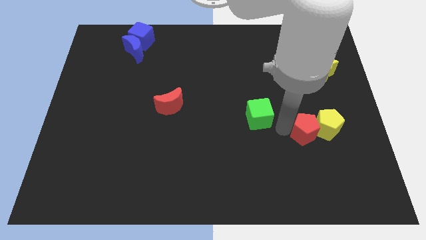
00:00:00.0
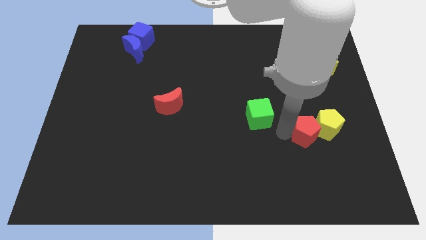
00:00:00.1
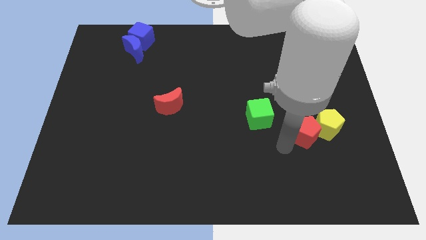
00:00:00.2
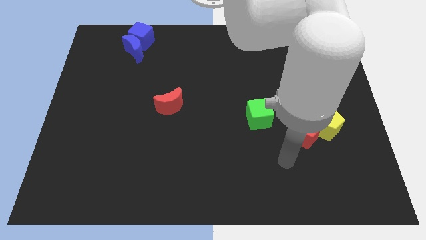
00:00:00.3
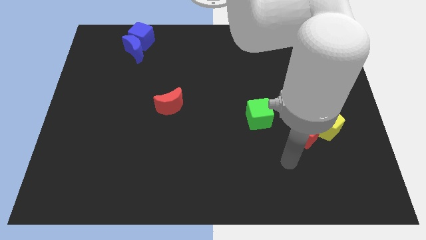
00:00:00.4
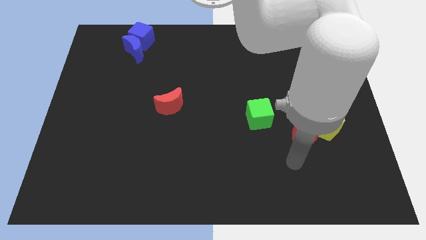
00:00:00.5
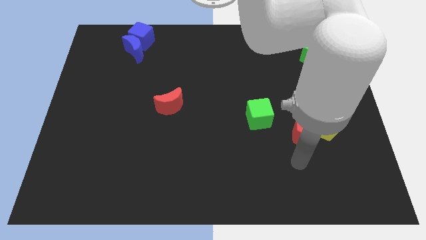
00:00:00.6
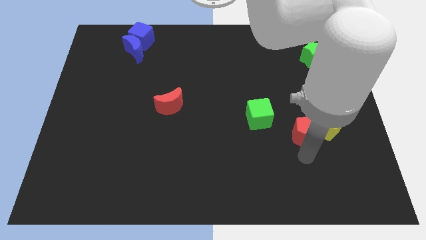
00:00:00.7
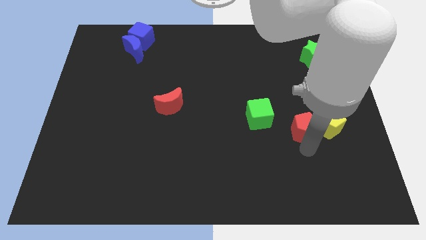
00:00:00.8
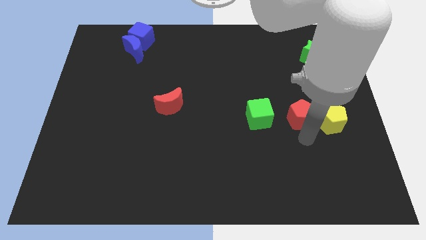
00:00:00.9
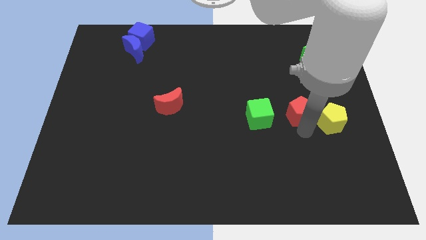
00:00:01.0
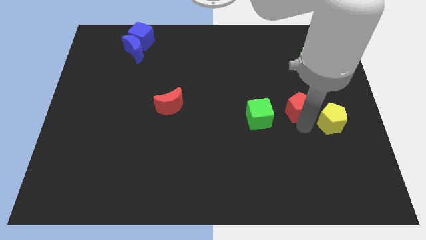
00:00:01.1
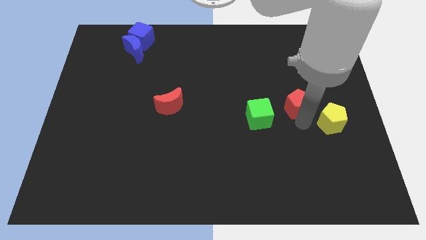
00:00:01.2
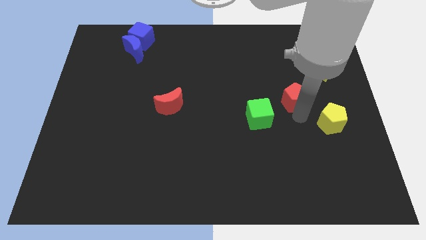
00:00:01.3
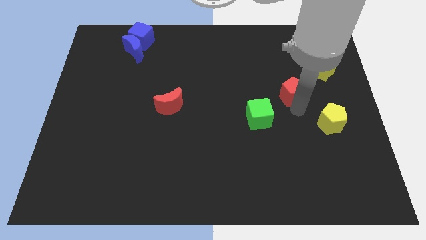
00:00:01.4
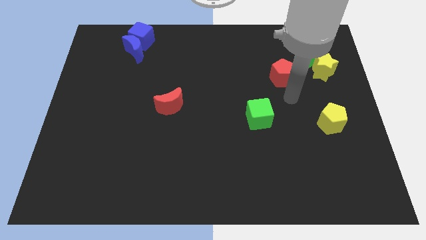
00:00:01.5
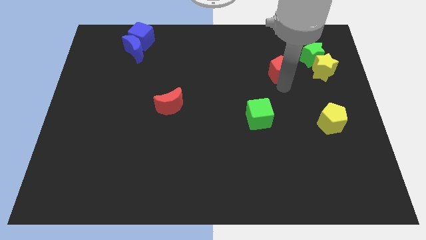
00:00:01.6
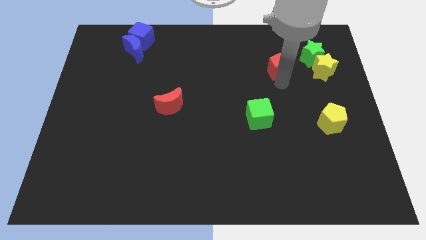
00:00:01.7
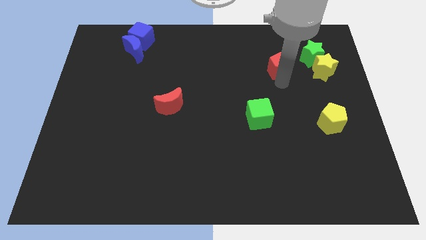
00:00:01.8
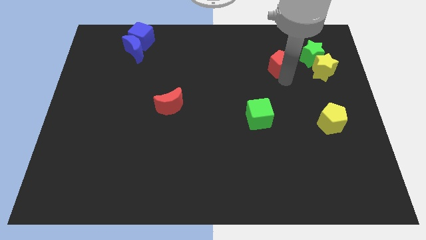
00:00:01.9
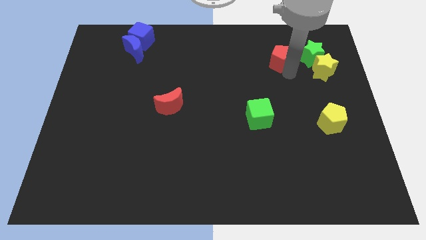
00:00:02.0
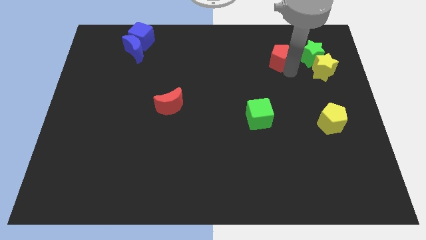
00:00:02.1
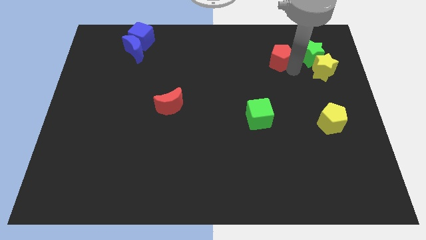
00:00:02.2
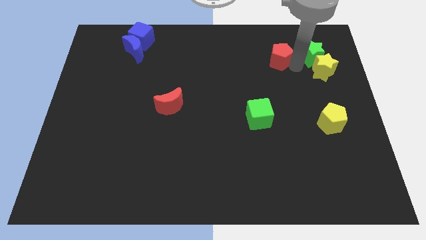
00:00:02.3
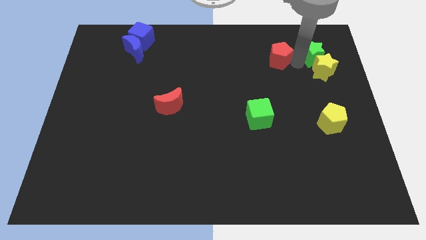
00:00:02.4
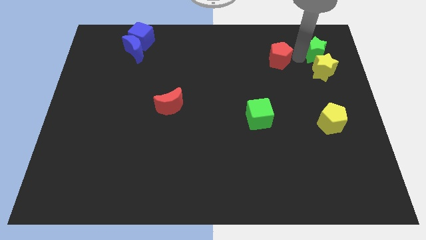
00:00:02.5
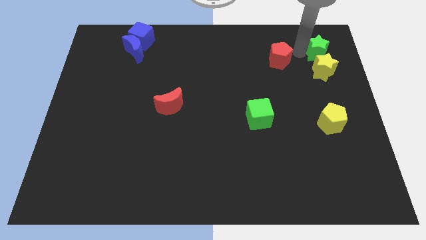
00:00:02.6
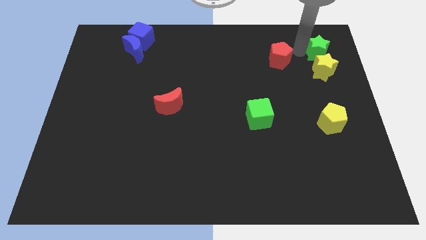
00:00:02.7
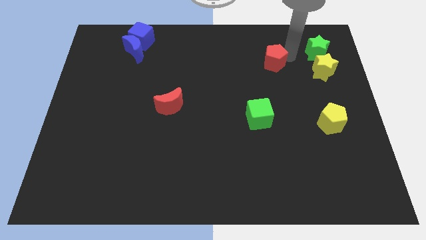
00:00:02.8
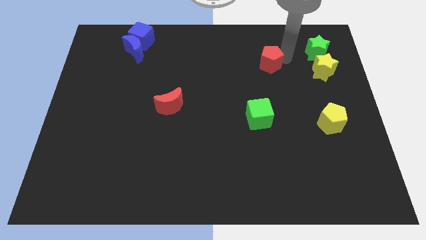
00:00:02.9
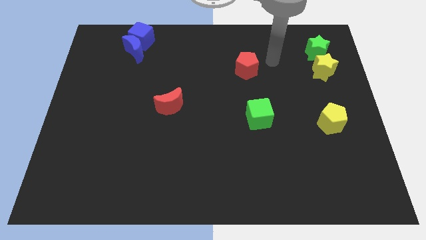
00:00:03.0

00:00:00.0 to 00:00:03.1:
place the red pentagon above the green cube

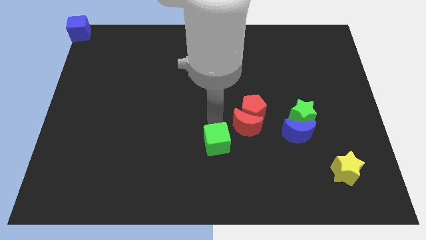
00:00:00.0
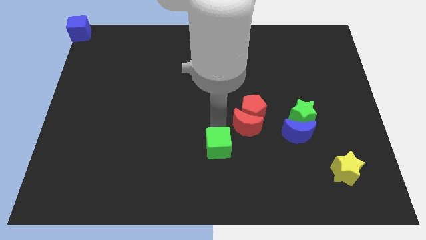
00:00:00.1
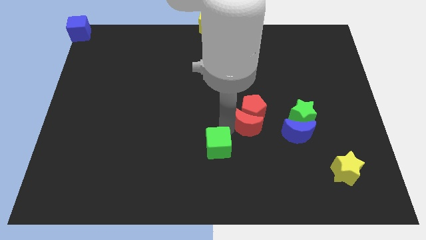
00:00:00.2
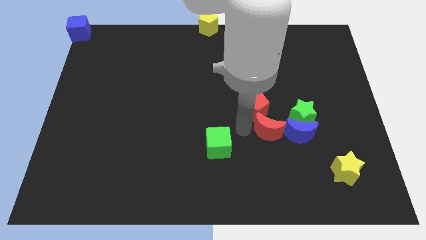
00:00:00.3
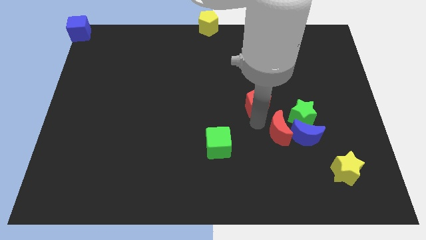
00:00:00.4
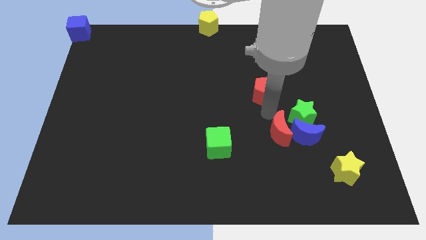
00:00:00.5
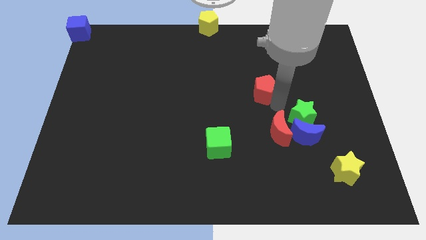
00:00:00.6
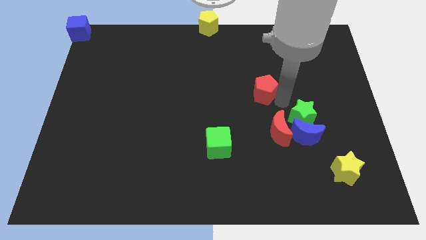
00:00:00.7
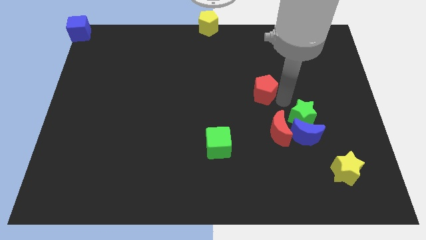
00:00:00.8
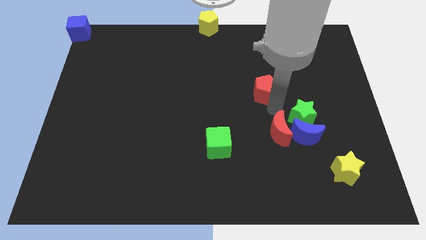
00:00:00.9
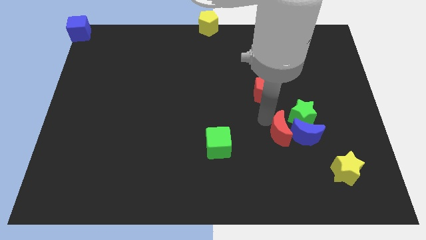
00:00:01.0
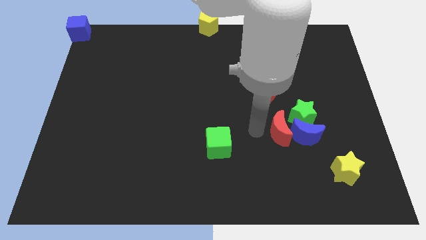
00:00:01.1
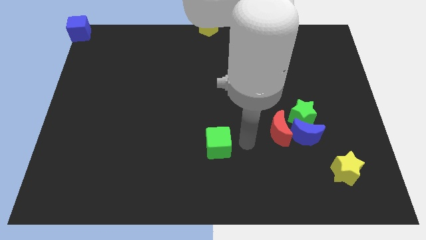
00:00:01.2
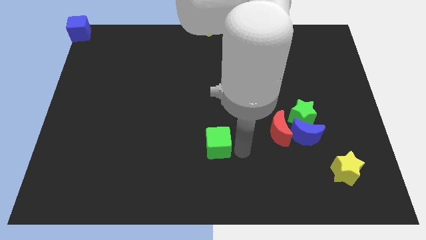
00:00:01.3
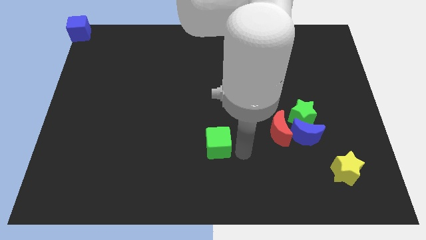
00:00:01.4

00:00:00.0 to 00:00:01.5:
separate the red blocks

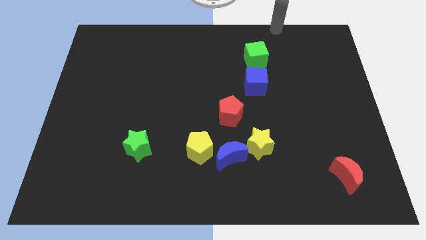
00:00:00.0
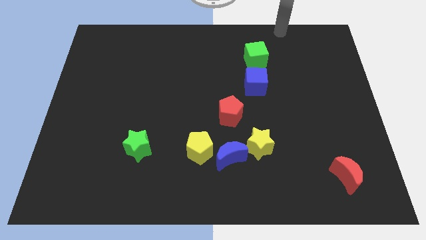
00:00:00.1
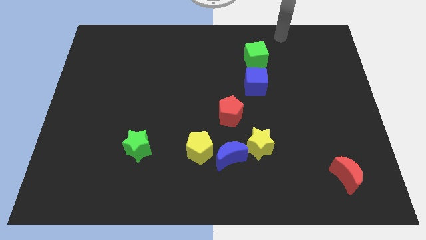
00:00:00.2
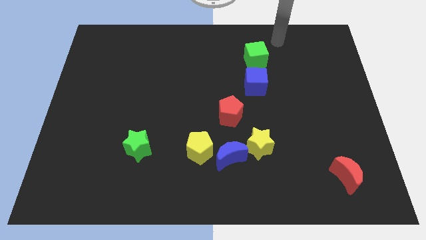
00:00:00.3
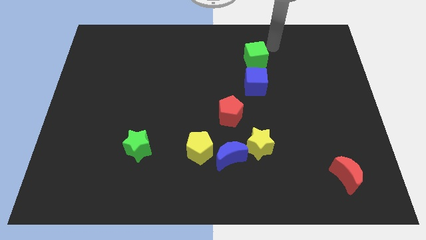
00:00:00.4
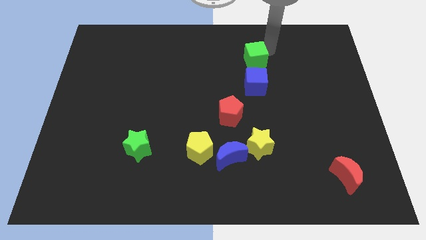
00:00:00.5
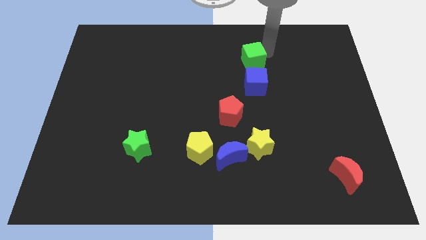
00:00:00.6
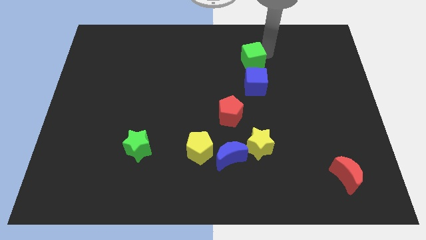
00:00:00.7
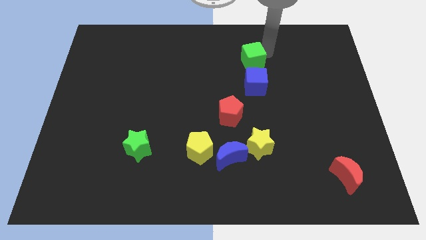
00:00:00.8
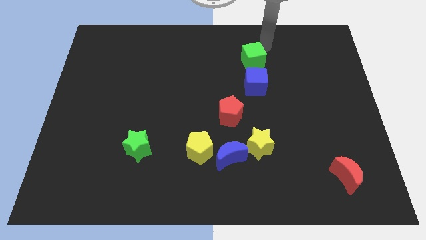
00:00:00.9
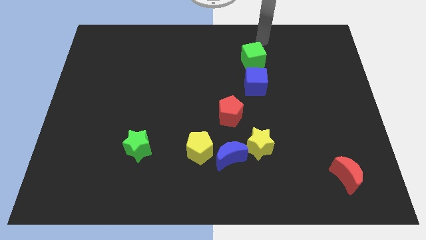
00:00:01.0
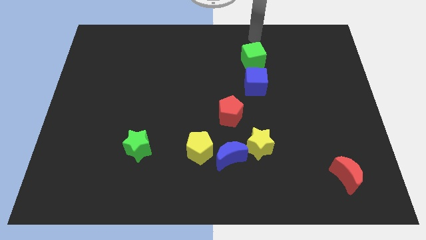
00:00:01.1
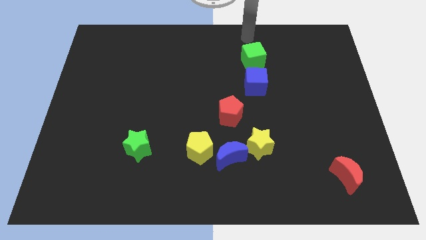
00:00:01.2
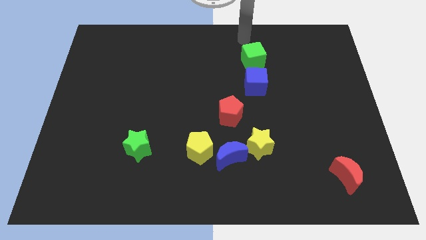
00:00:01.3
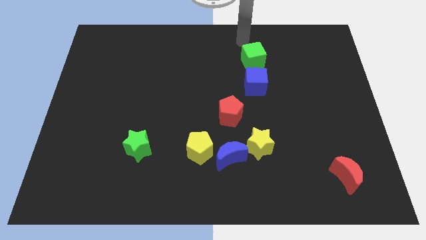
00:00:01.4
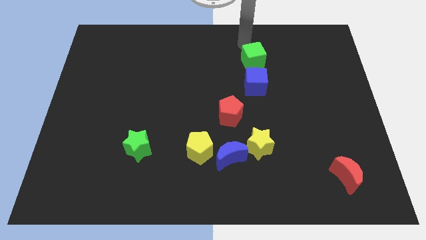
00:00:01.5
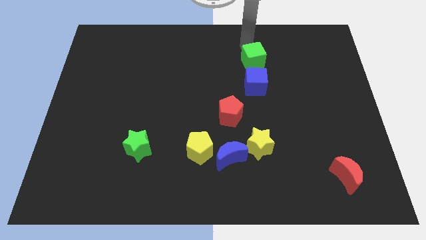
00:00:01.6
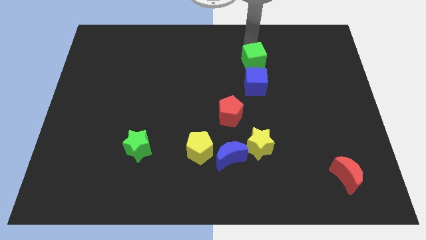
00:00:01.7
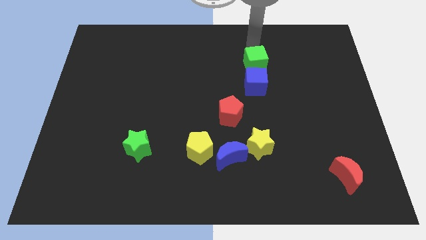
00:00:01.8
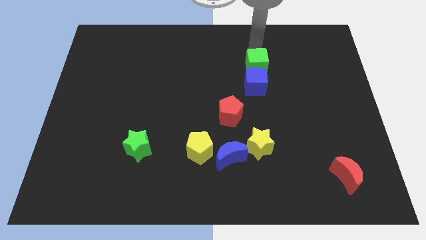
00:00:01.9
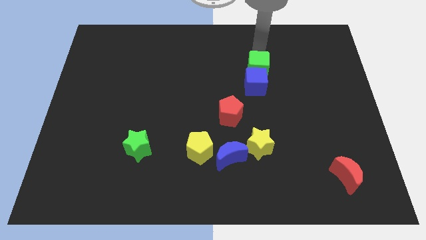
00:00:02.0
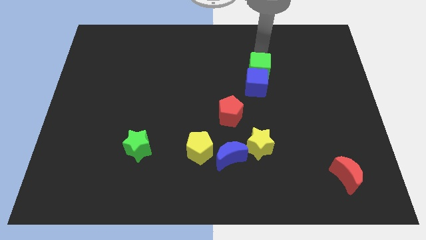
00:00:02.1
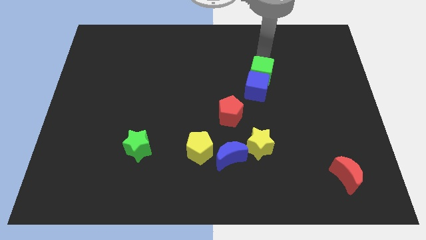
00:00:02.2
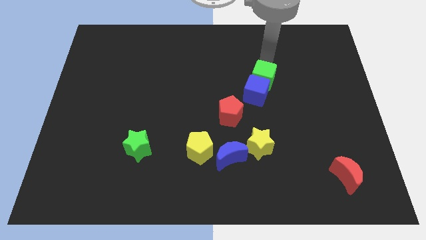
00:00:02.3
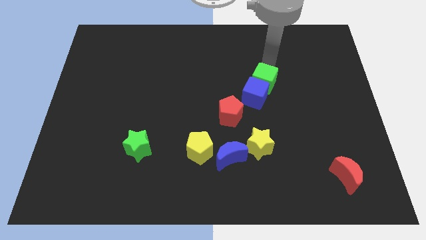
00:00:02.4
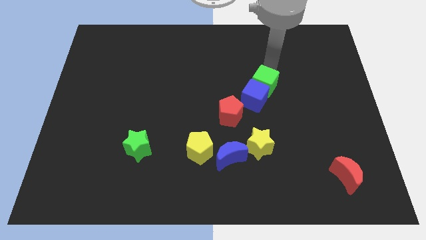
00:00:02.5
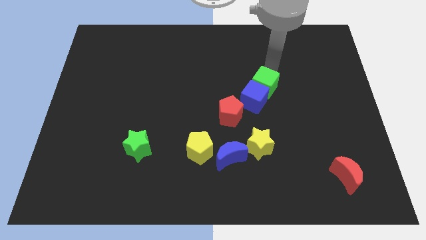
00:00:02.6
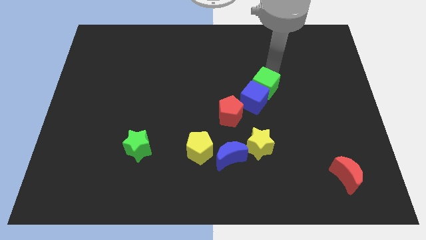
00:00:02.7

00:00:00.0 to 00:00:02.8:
push the green cube into the blue cube

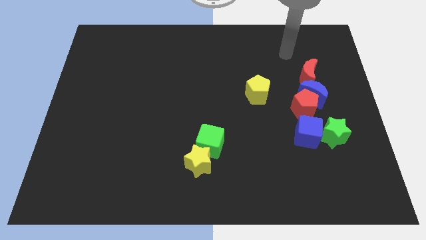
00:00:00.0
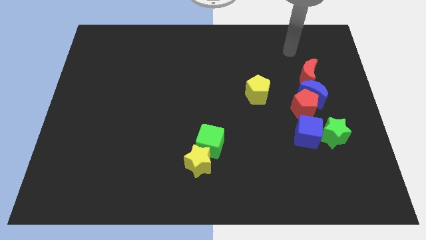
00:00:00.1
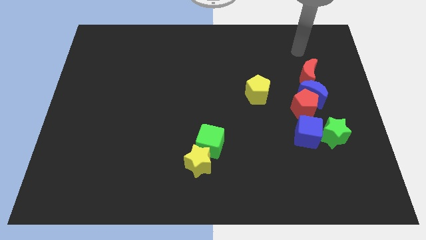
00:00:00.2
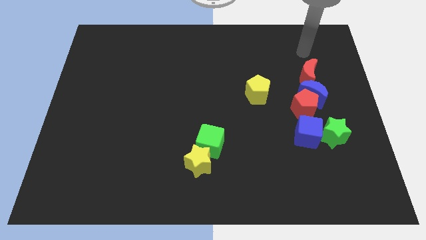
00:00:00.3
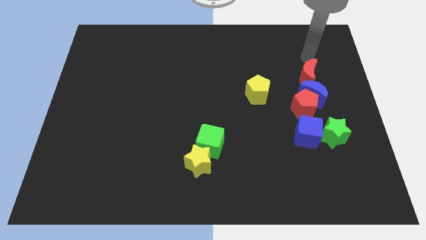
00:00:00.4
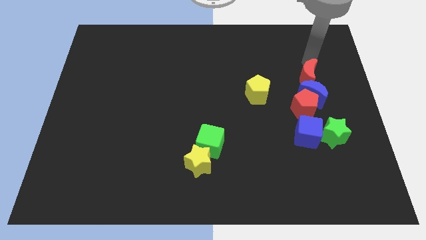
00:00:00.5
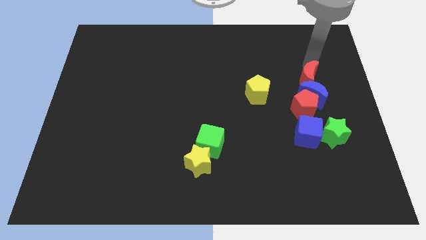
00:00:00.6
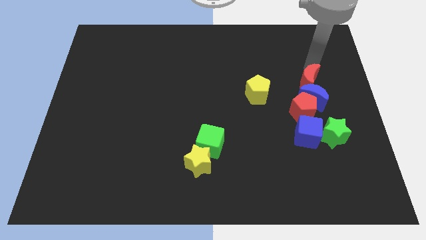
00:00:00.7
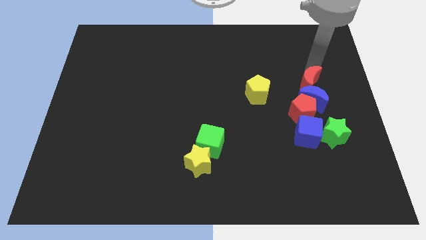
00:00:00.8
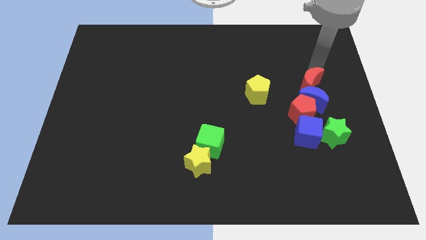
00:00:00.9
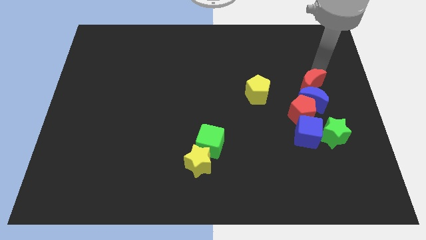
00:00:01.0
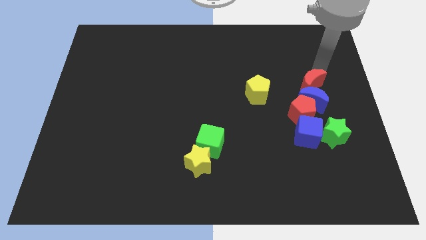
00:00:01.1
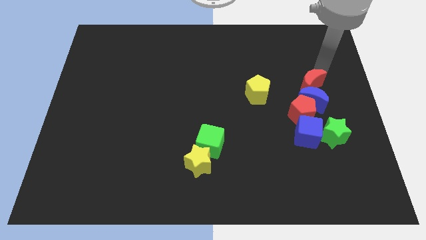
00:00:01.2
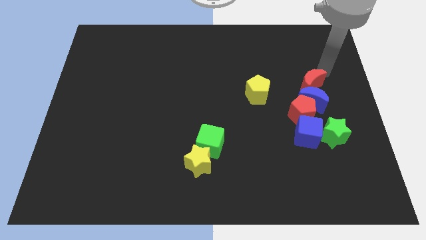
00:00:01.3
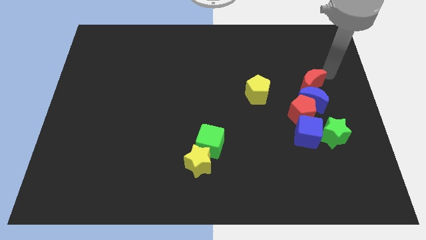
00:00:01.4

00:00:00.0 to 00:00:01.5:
push the red moon slightly to the down

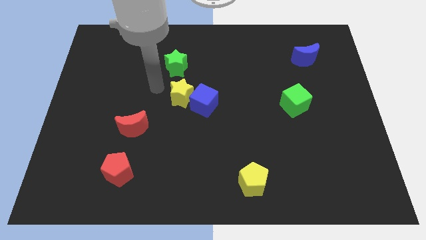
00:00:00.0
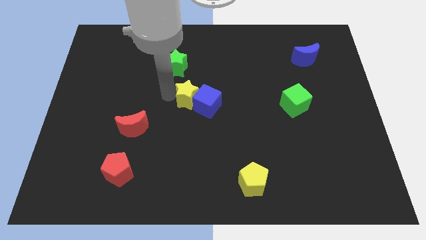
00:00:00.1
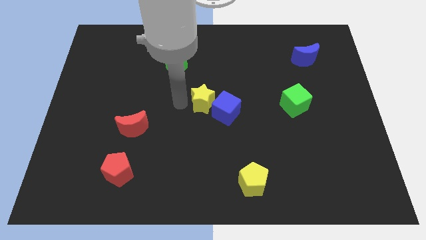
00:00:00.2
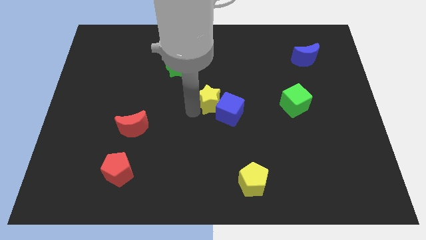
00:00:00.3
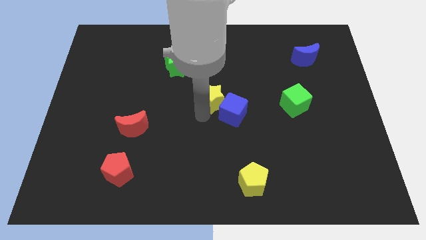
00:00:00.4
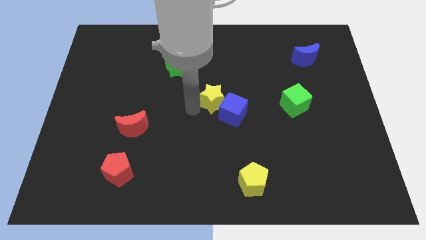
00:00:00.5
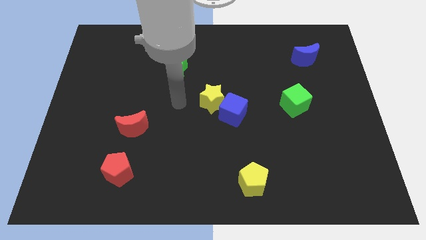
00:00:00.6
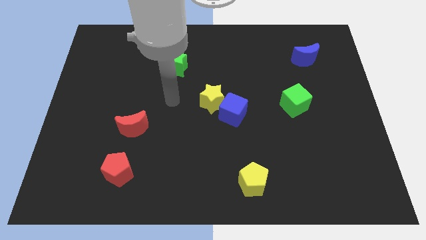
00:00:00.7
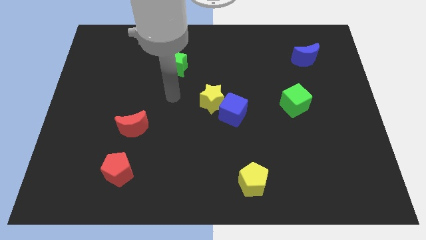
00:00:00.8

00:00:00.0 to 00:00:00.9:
push yellow star and blue cube to center
